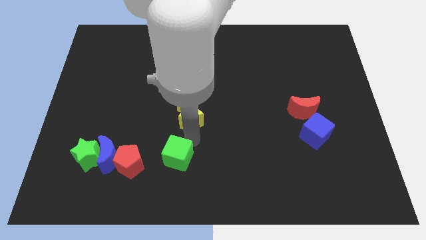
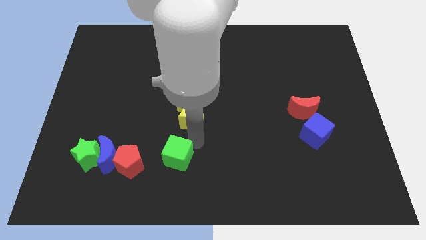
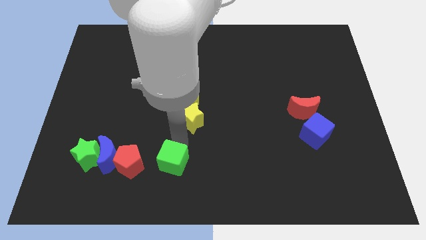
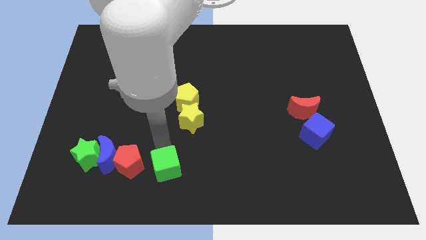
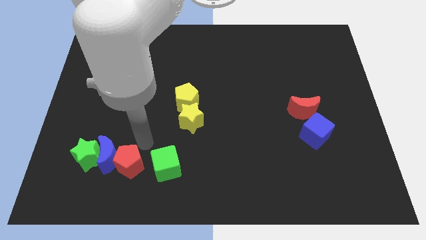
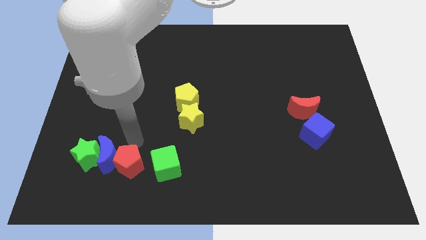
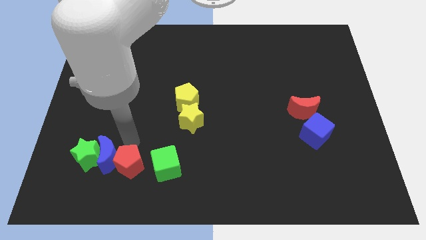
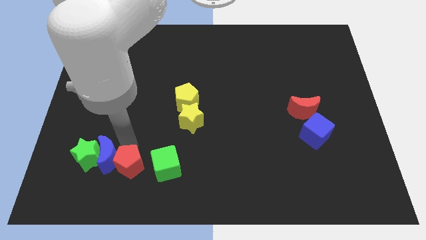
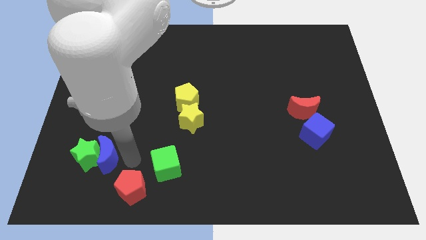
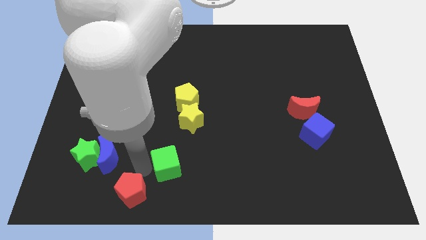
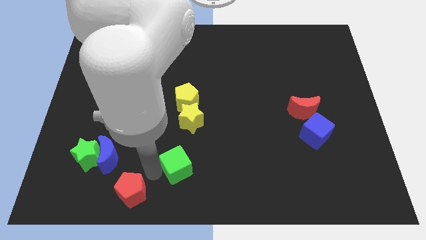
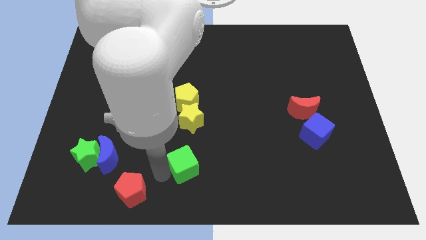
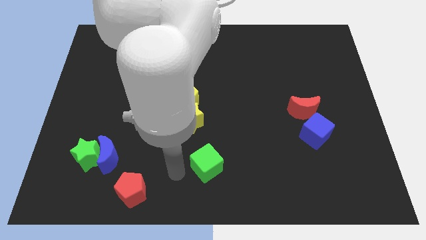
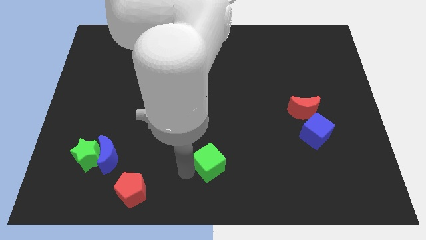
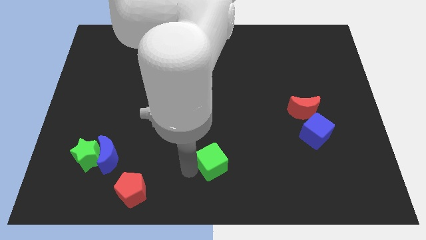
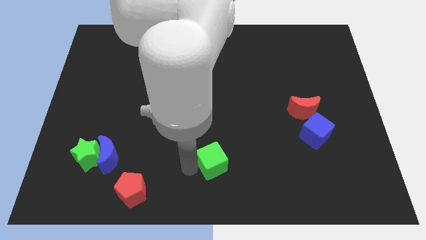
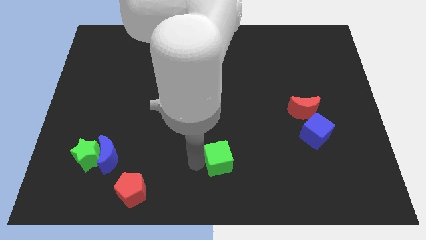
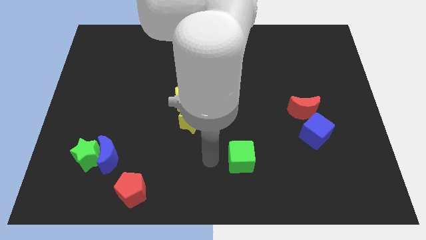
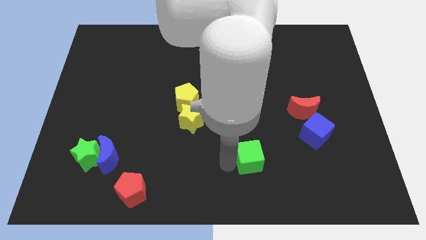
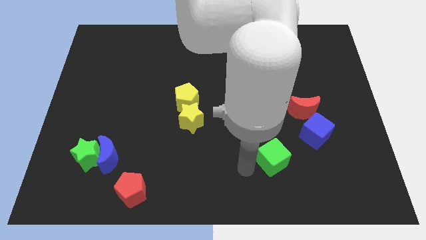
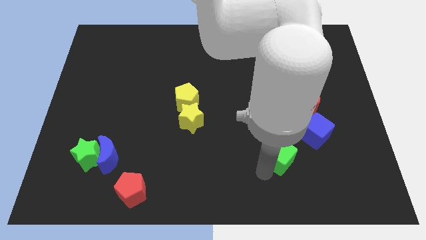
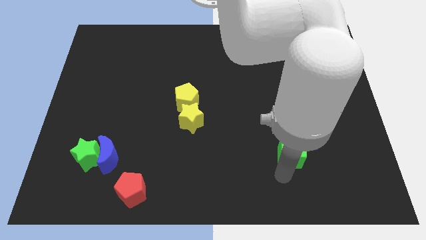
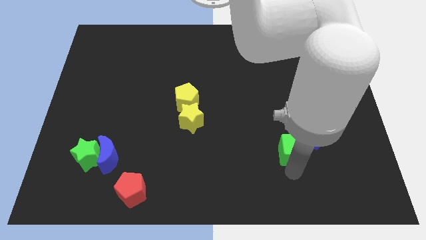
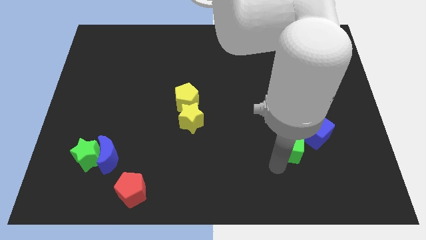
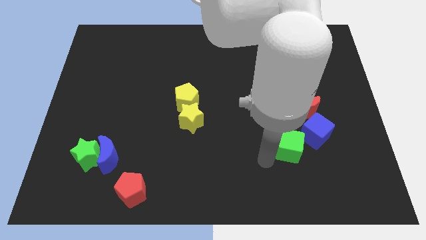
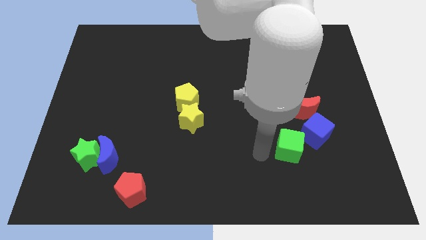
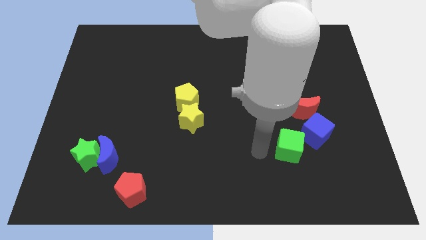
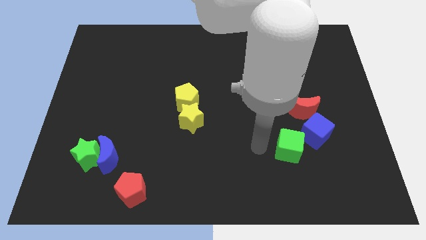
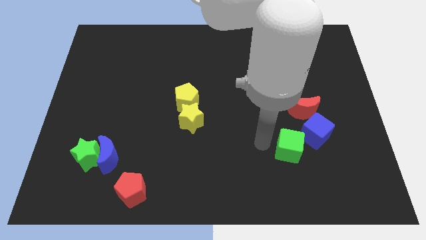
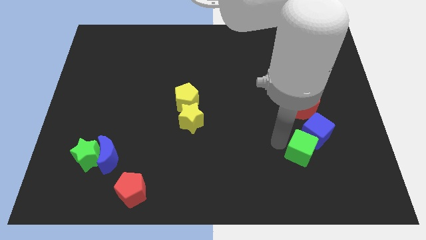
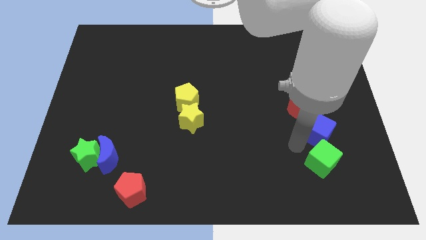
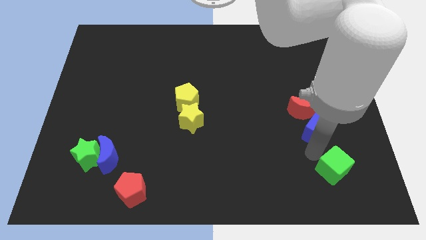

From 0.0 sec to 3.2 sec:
place the green cube vertically below the blue cube

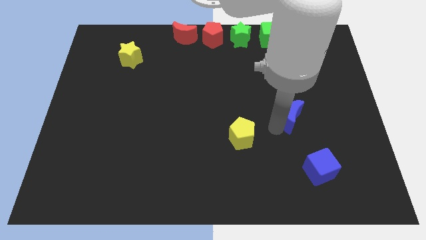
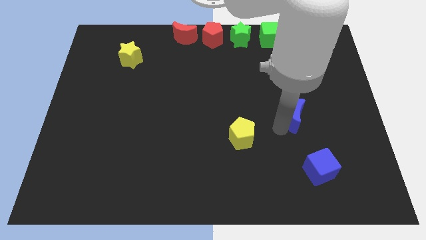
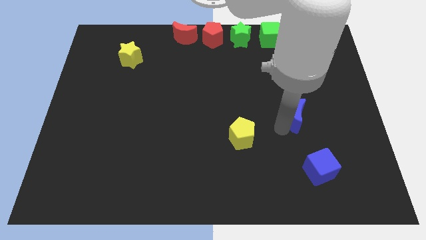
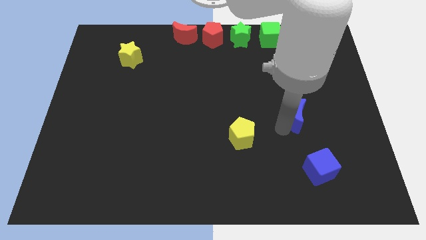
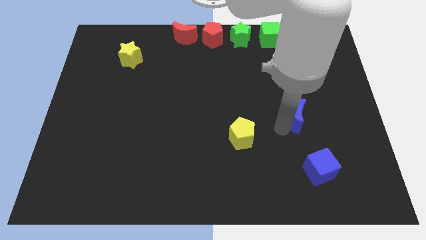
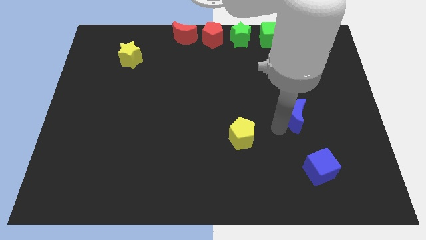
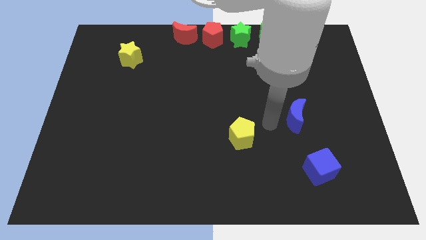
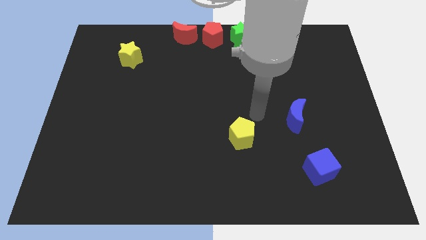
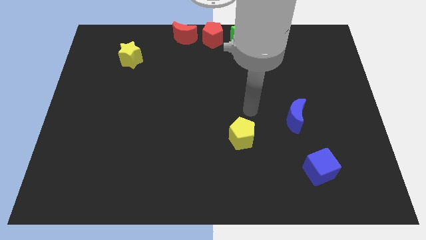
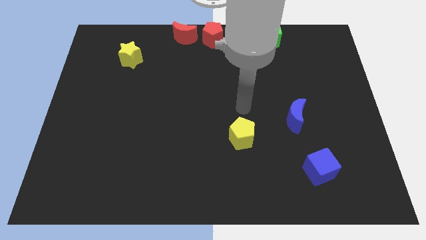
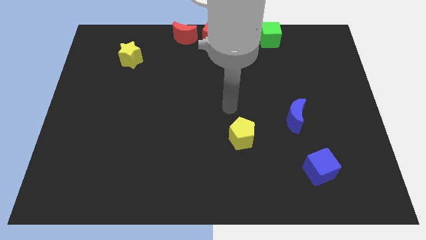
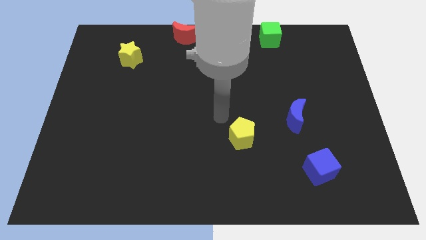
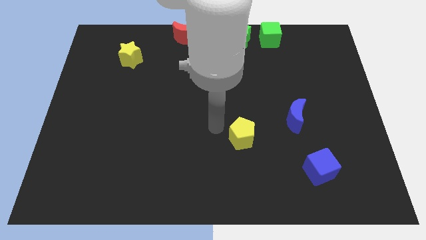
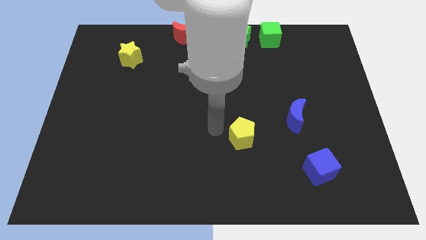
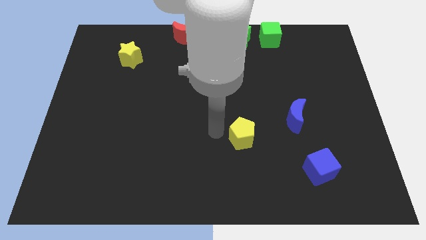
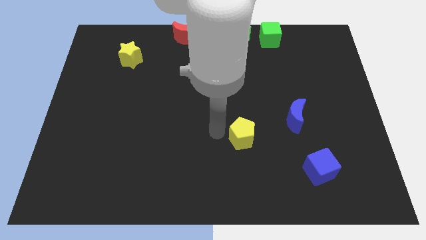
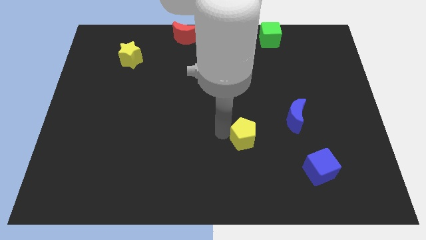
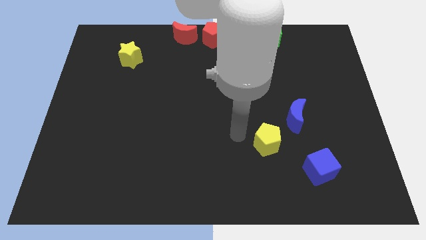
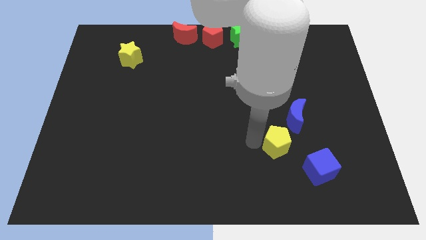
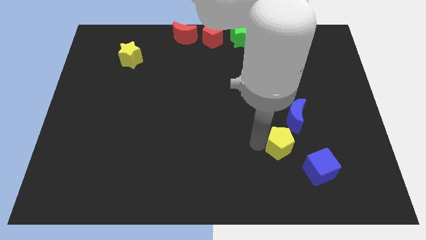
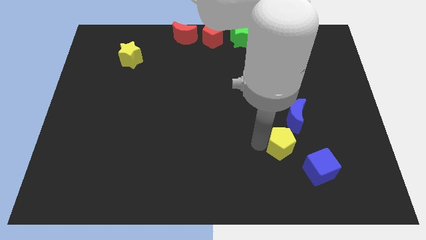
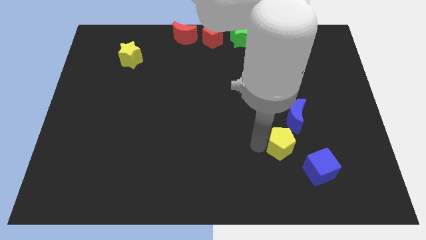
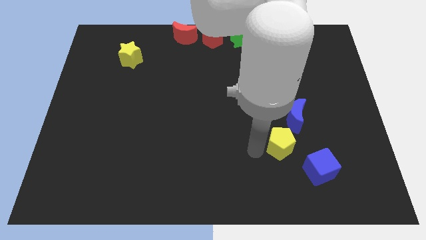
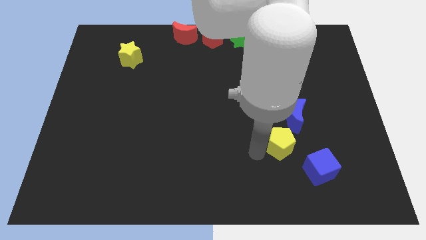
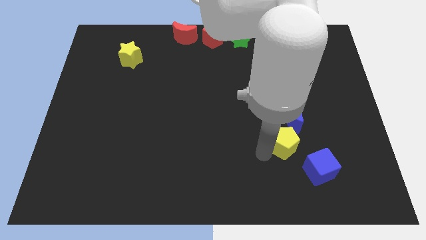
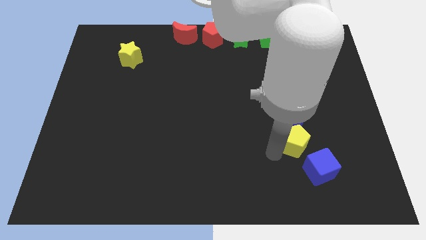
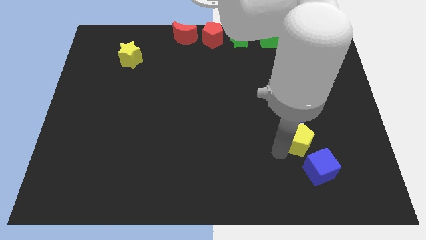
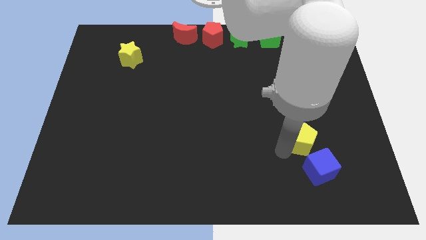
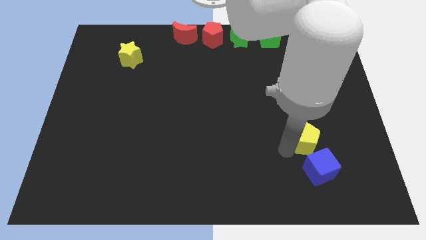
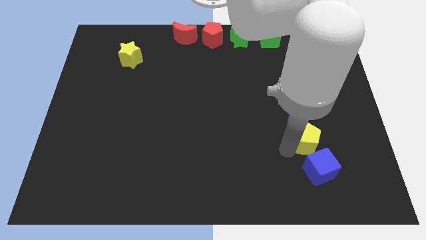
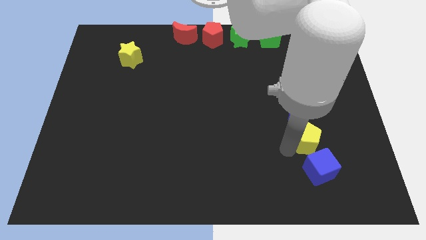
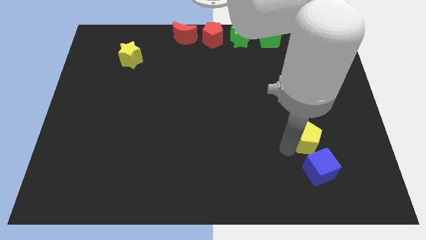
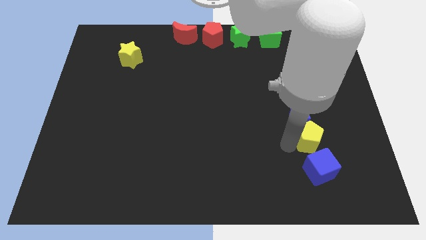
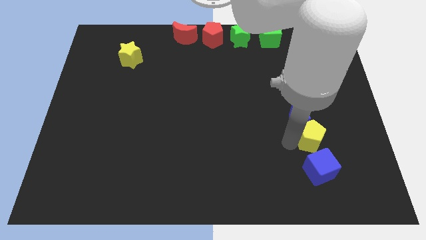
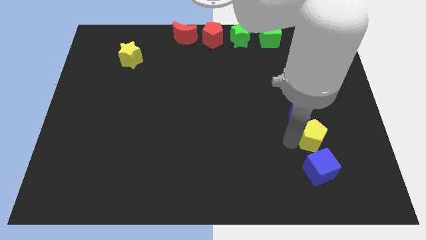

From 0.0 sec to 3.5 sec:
put yellow pentagon in between blue blocks

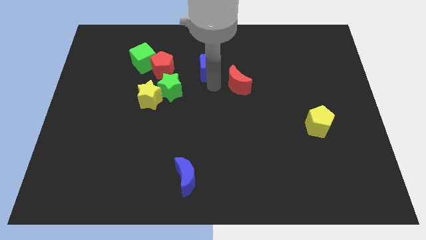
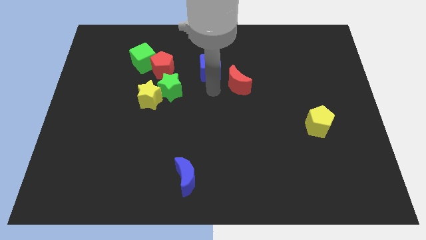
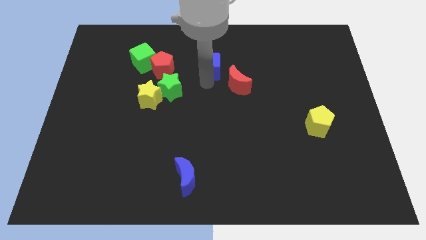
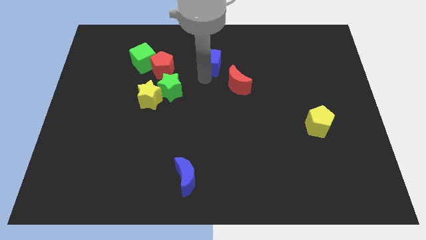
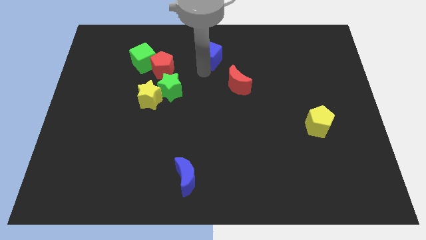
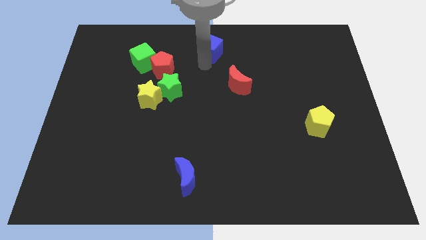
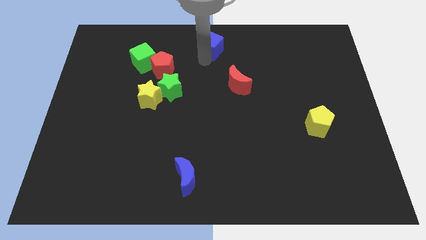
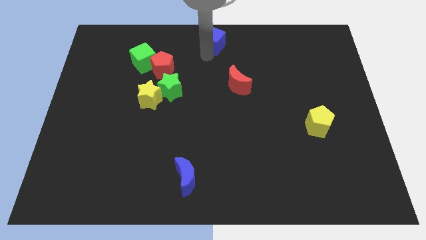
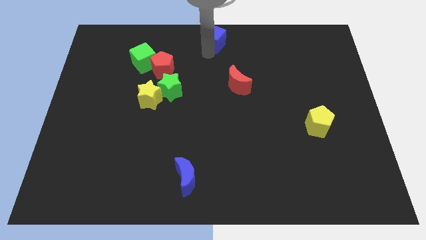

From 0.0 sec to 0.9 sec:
place the blue cube at the top center of the board

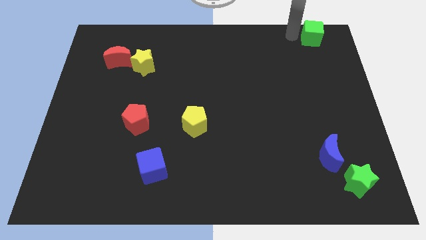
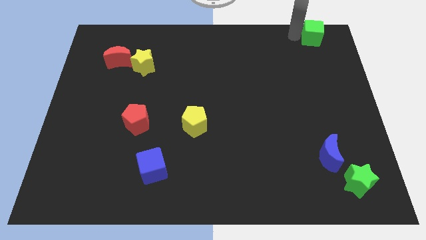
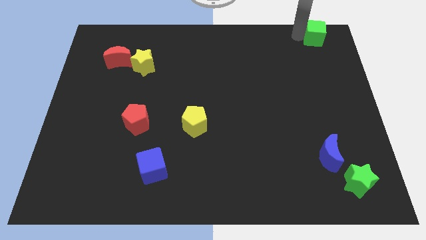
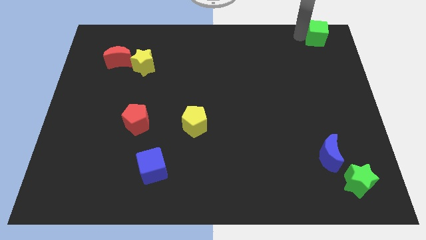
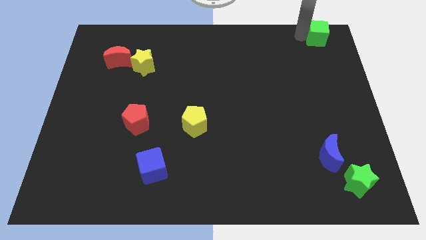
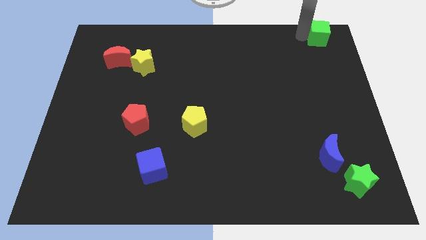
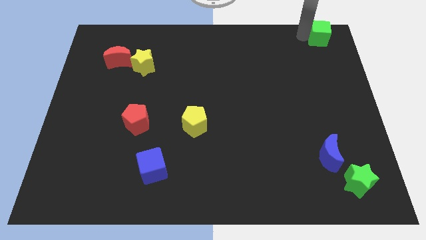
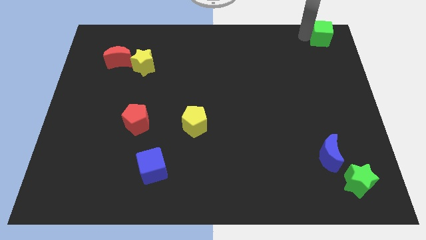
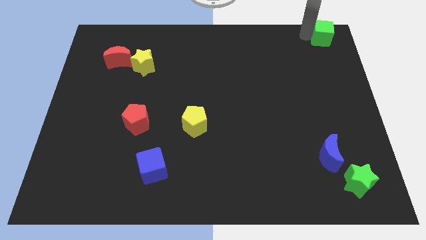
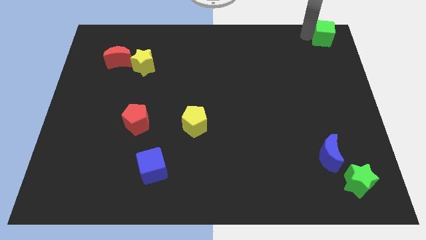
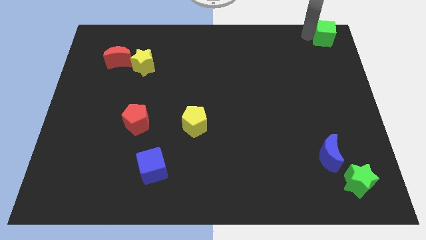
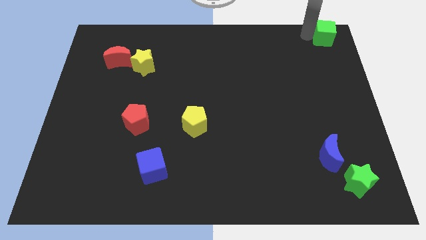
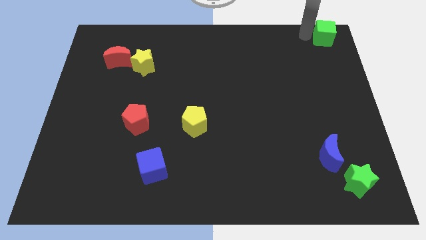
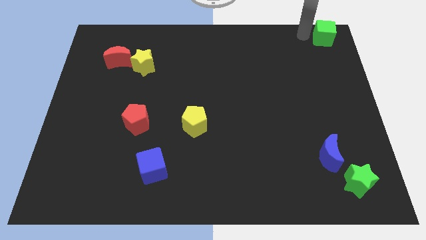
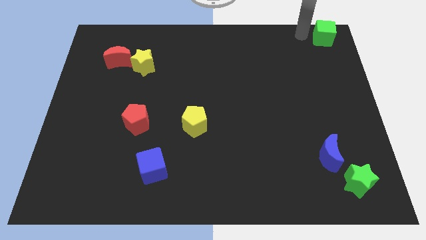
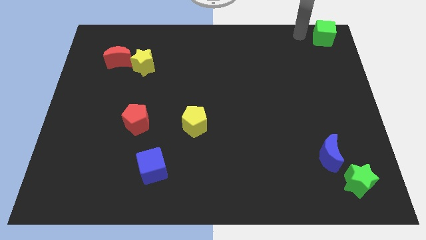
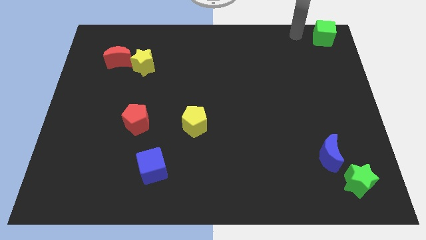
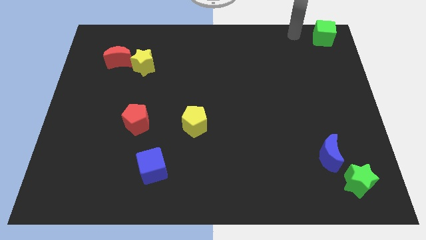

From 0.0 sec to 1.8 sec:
push the green cube to the top right corner of the board
